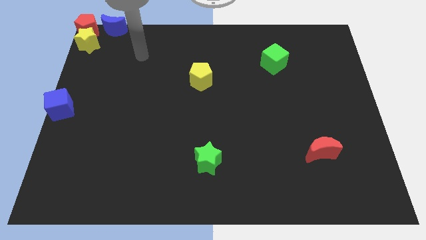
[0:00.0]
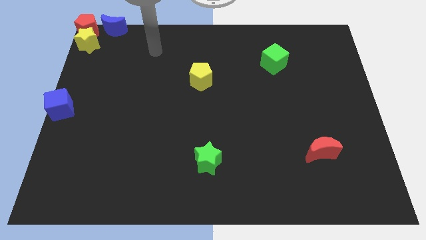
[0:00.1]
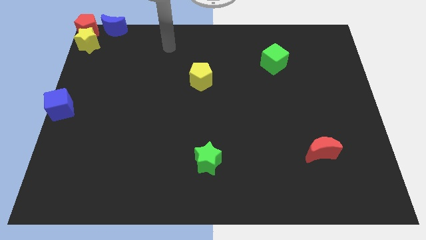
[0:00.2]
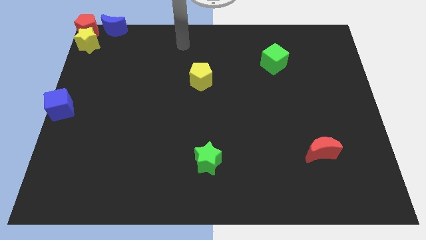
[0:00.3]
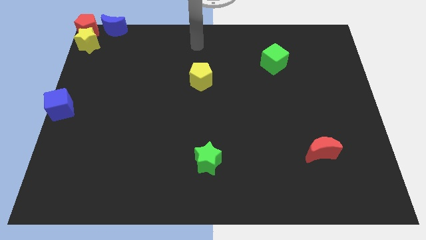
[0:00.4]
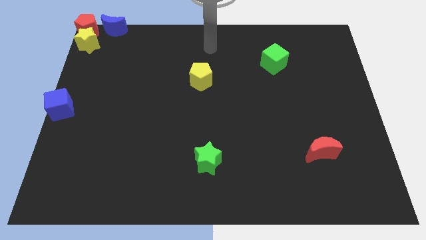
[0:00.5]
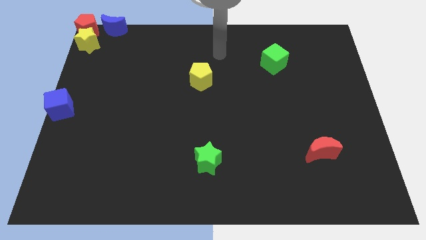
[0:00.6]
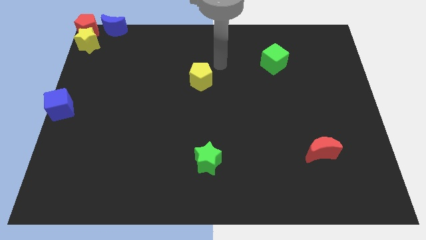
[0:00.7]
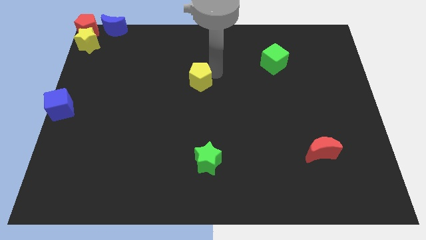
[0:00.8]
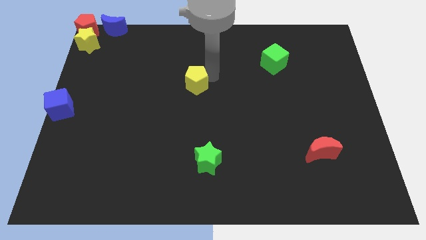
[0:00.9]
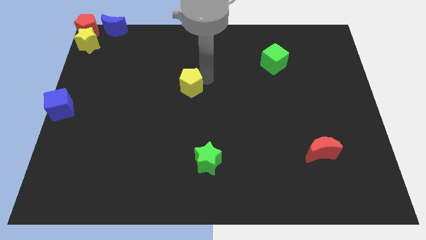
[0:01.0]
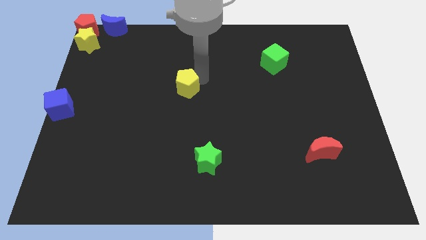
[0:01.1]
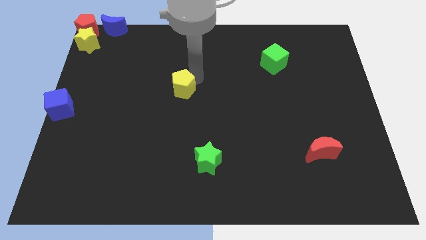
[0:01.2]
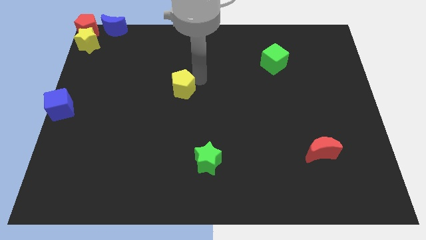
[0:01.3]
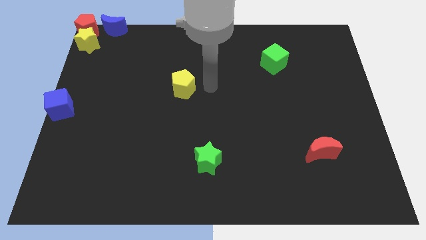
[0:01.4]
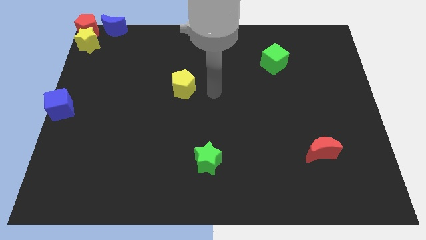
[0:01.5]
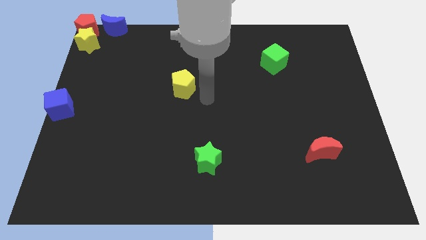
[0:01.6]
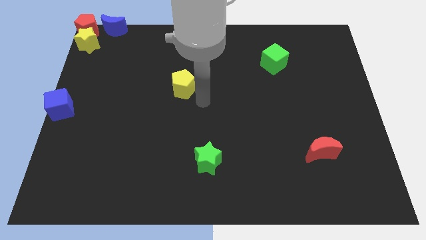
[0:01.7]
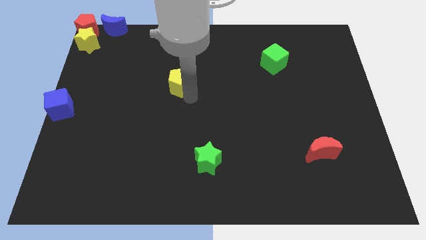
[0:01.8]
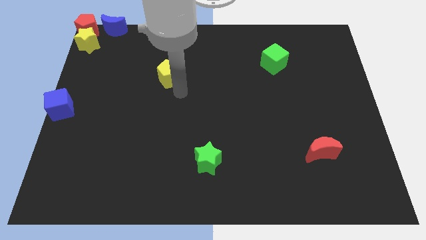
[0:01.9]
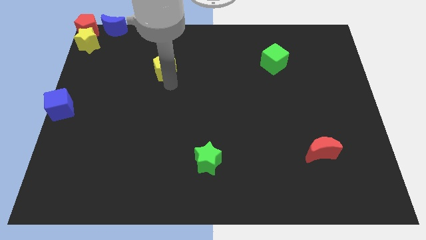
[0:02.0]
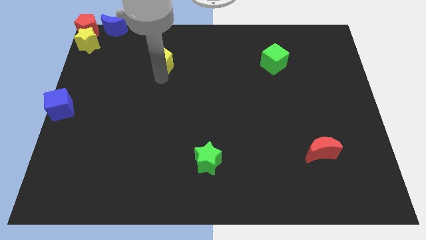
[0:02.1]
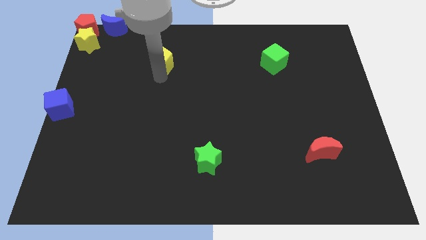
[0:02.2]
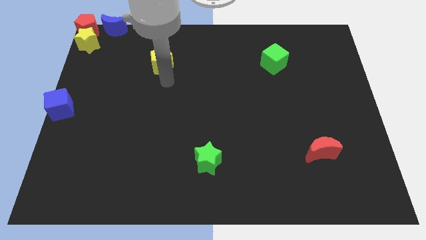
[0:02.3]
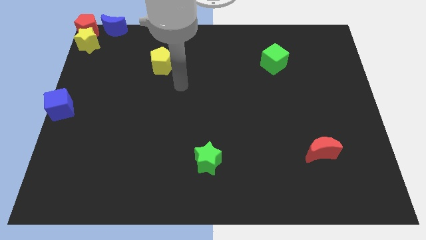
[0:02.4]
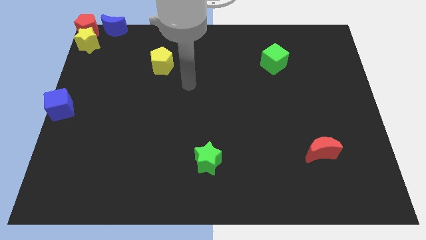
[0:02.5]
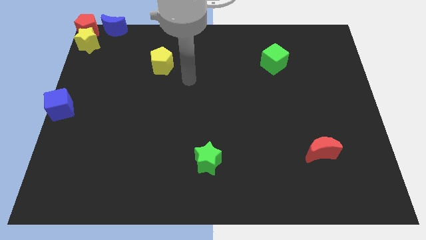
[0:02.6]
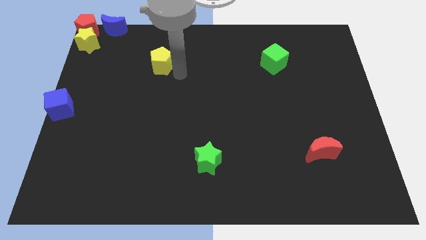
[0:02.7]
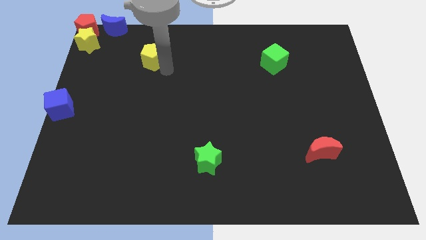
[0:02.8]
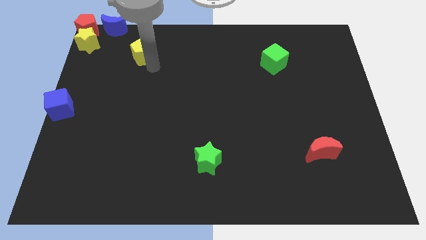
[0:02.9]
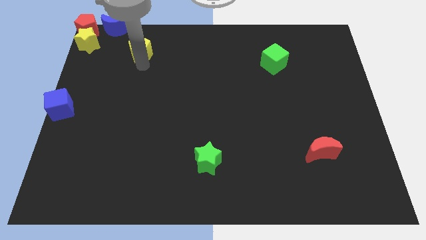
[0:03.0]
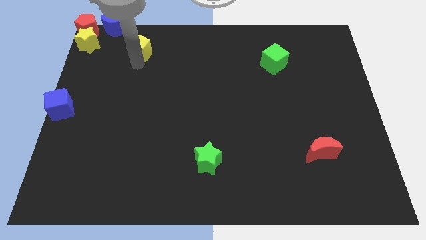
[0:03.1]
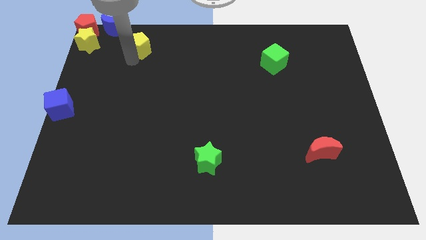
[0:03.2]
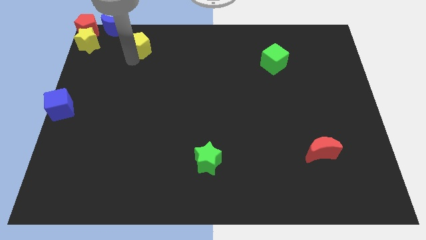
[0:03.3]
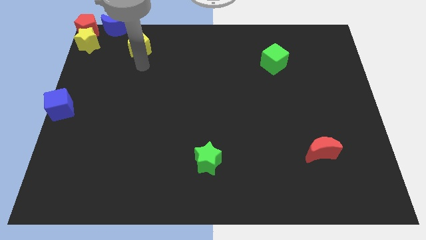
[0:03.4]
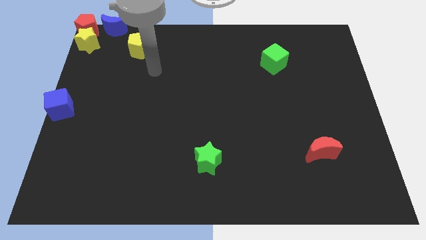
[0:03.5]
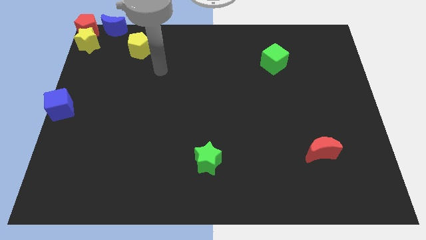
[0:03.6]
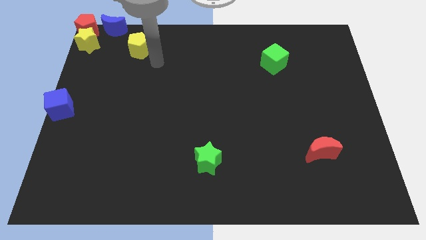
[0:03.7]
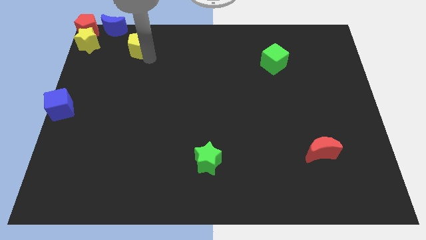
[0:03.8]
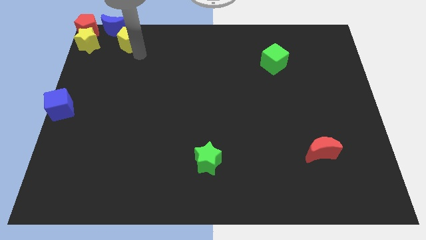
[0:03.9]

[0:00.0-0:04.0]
move the yellow pentagon towards the bottom right side of the blue crescent

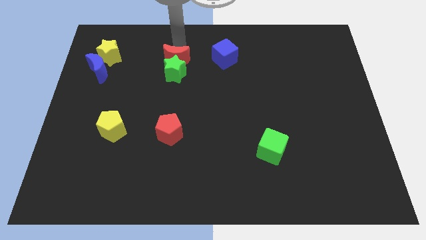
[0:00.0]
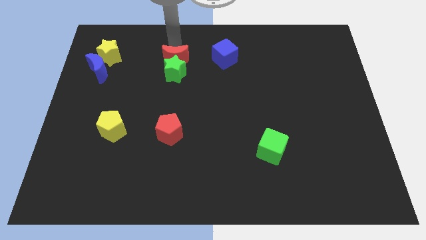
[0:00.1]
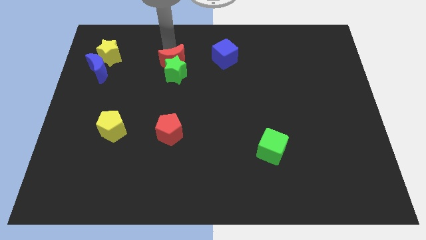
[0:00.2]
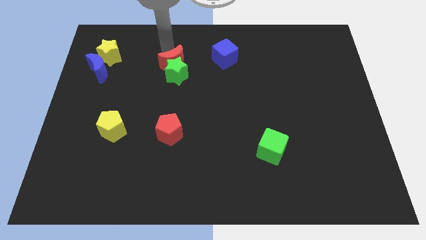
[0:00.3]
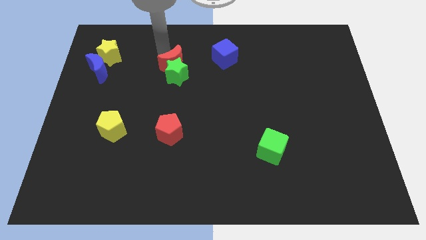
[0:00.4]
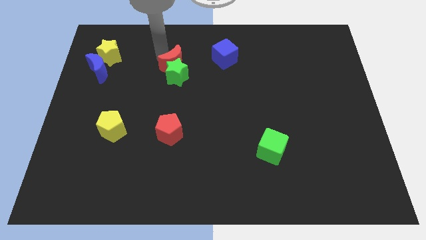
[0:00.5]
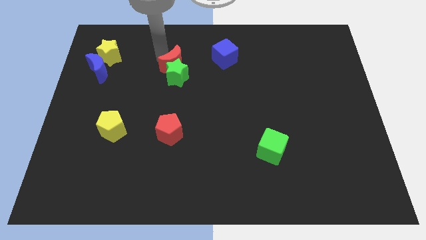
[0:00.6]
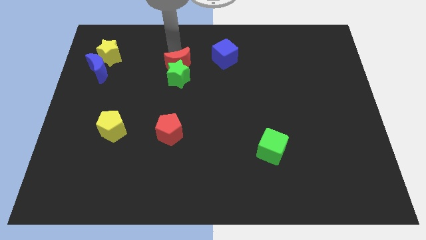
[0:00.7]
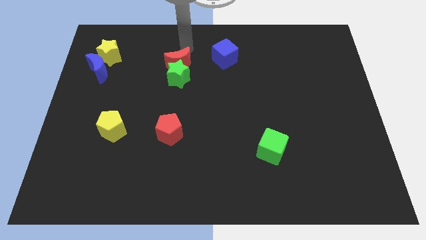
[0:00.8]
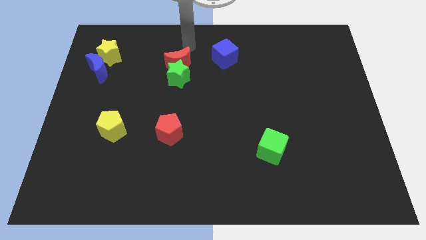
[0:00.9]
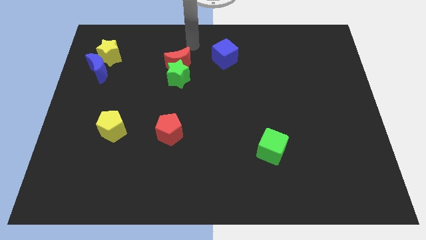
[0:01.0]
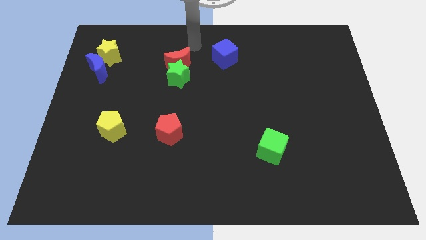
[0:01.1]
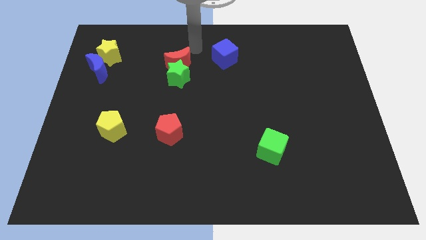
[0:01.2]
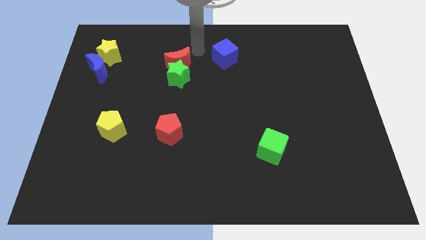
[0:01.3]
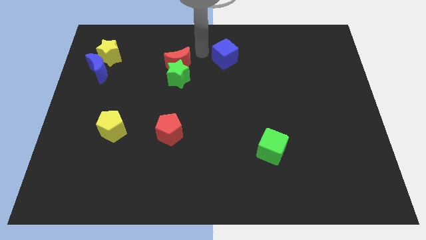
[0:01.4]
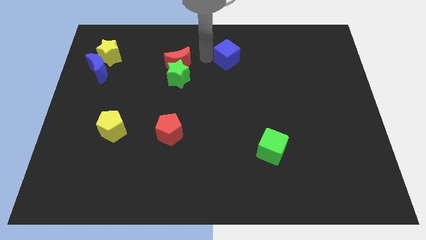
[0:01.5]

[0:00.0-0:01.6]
slightly push the red moon along with the green star to the bottom side

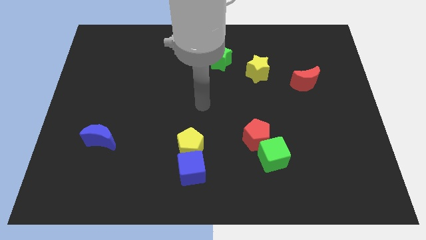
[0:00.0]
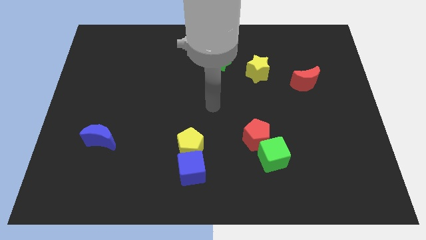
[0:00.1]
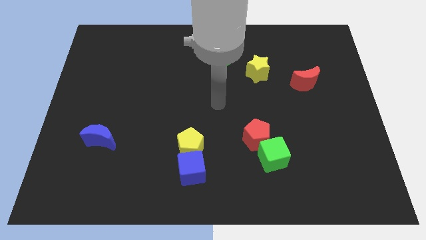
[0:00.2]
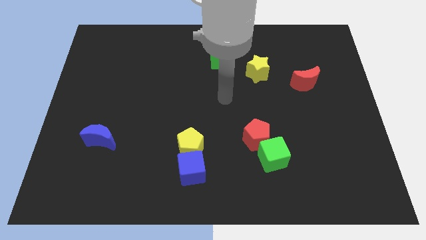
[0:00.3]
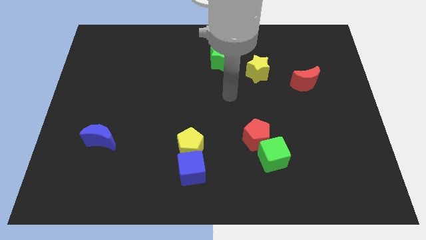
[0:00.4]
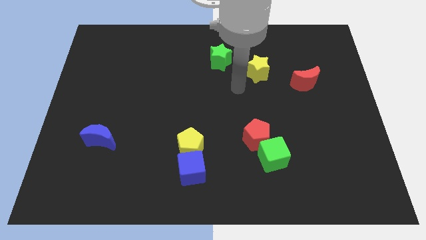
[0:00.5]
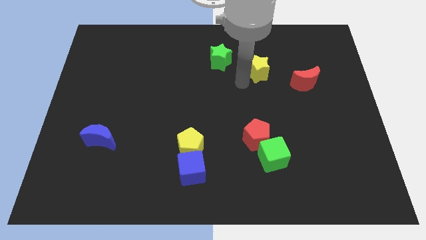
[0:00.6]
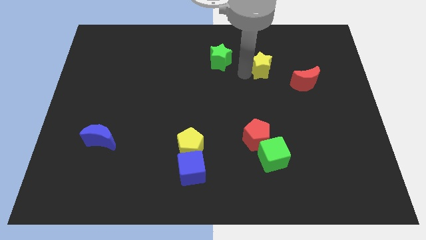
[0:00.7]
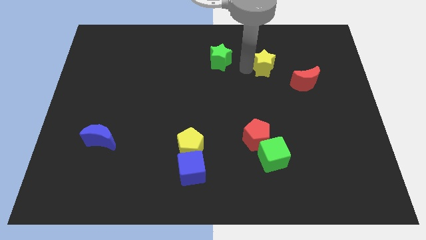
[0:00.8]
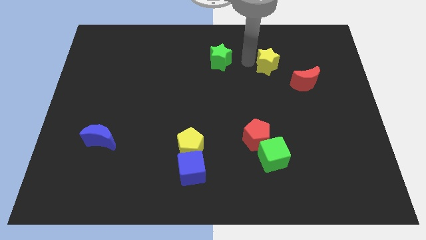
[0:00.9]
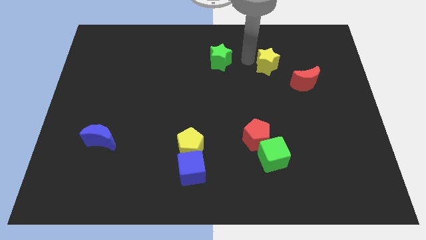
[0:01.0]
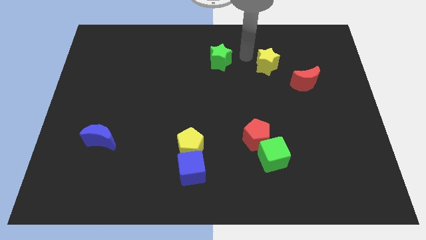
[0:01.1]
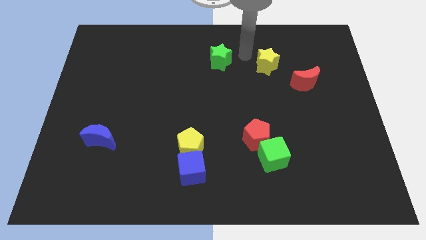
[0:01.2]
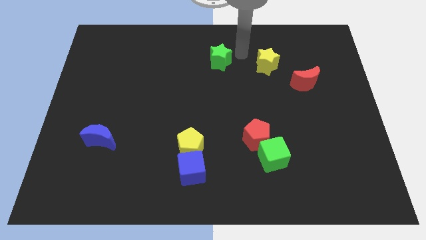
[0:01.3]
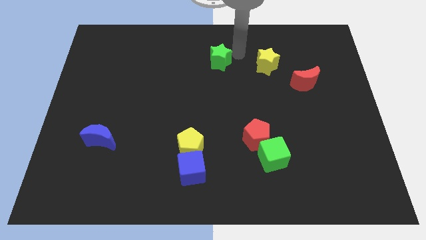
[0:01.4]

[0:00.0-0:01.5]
place the yellow star to the right of the green star

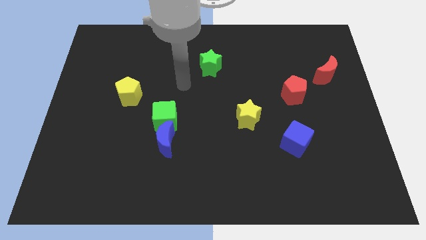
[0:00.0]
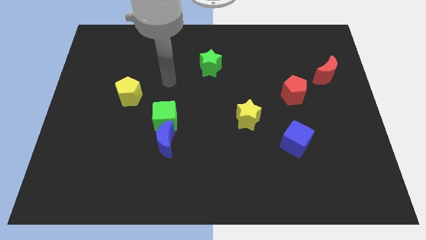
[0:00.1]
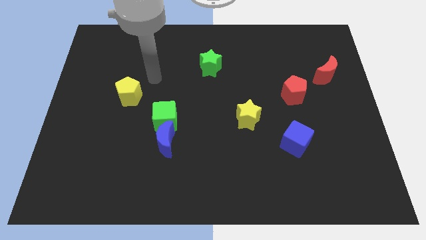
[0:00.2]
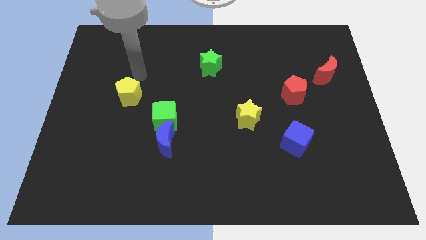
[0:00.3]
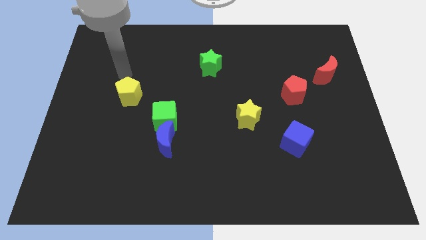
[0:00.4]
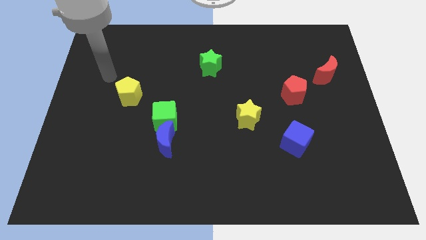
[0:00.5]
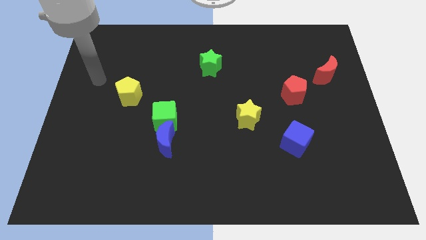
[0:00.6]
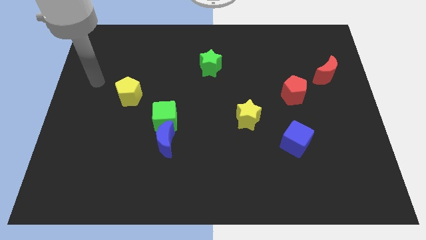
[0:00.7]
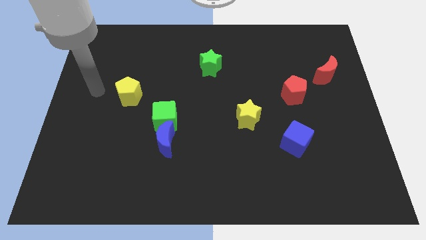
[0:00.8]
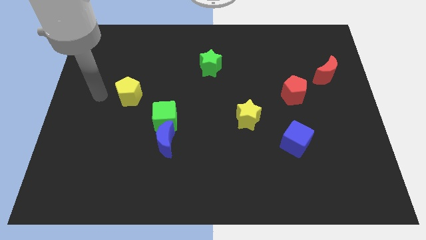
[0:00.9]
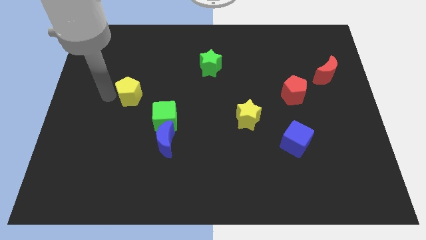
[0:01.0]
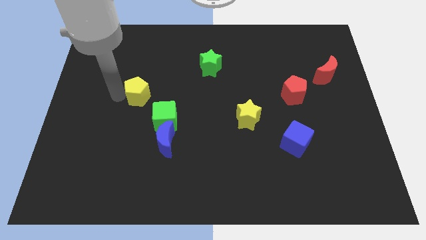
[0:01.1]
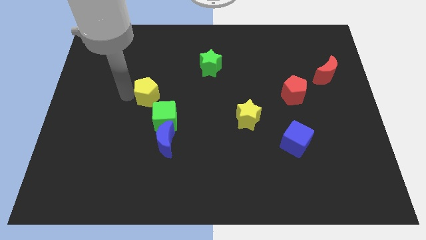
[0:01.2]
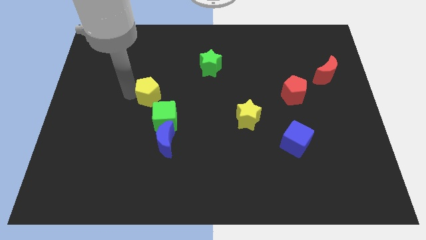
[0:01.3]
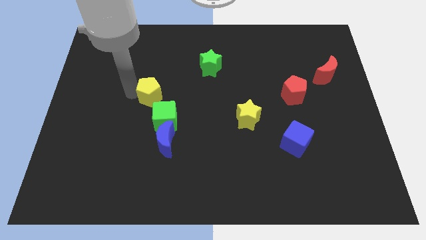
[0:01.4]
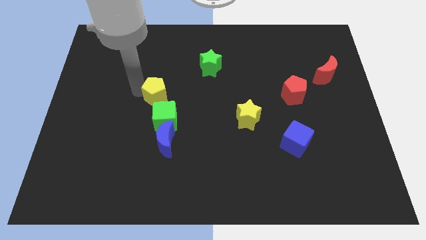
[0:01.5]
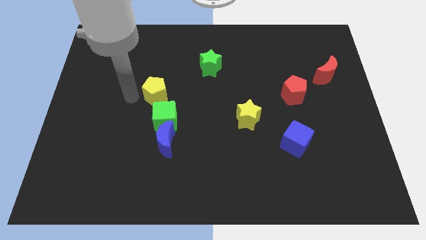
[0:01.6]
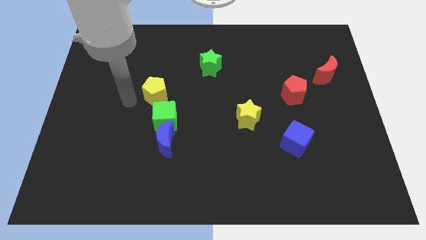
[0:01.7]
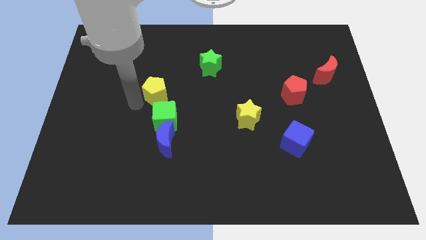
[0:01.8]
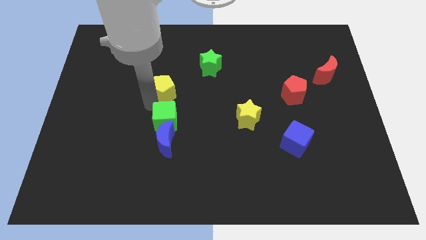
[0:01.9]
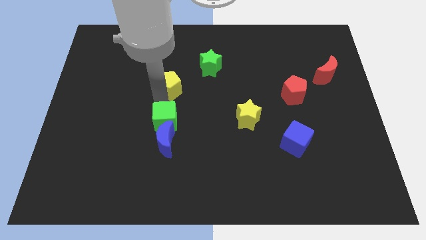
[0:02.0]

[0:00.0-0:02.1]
place the yellow pentagon vertically above the green cube
